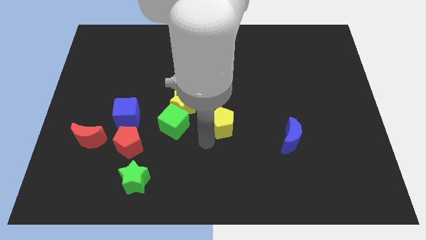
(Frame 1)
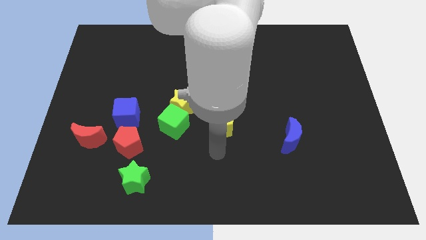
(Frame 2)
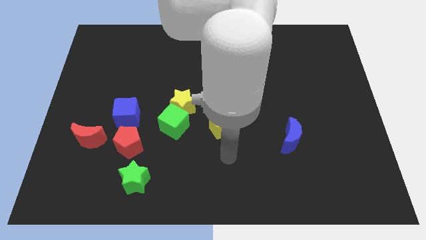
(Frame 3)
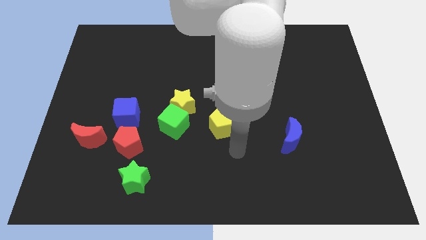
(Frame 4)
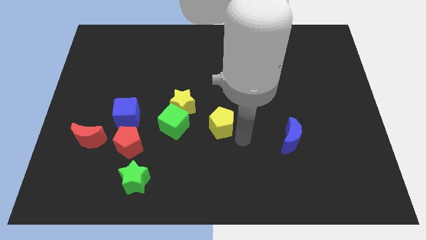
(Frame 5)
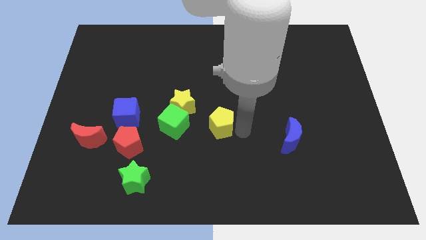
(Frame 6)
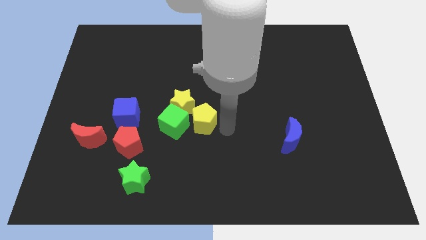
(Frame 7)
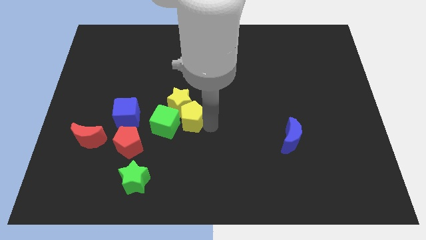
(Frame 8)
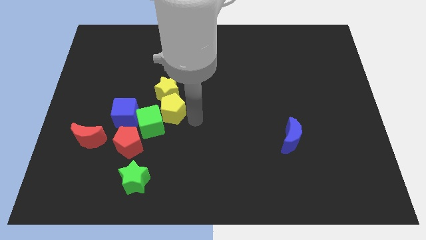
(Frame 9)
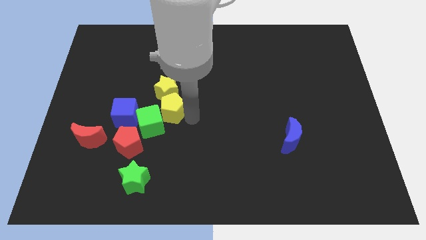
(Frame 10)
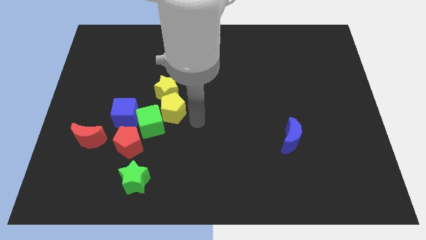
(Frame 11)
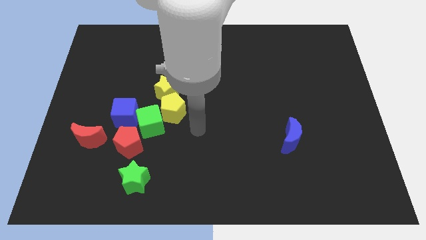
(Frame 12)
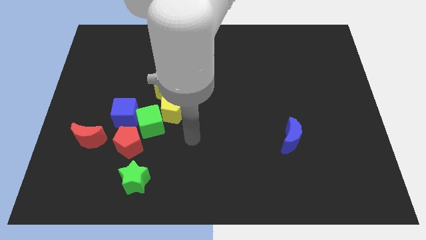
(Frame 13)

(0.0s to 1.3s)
push the yellow pentagon into the yellow star

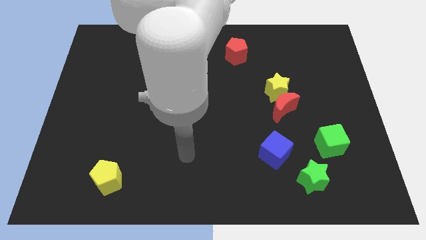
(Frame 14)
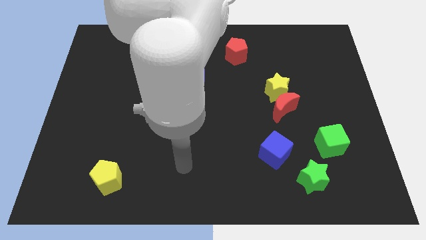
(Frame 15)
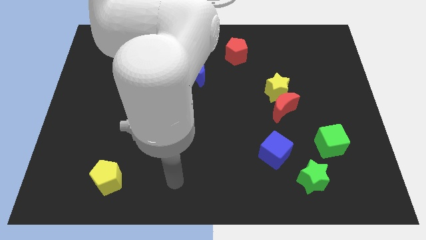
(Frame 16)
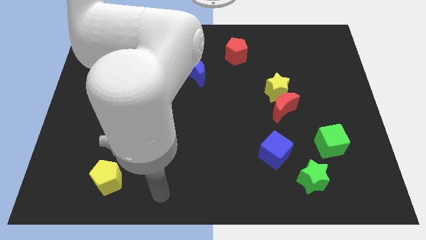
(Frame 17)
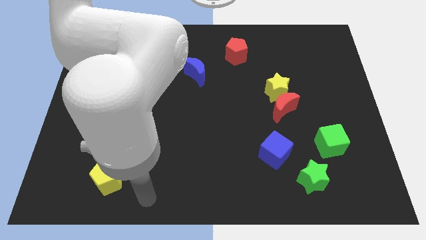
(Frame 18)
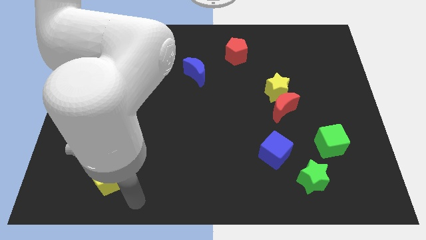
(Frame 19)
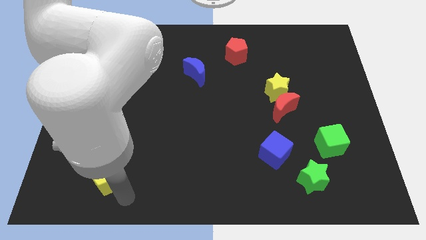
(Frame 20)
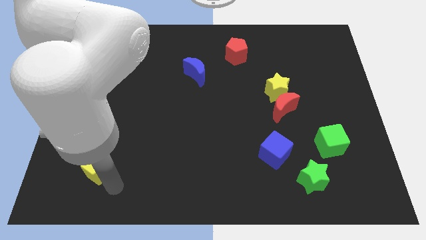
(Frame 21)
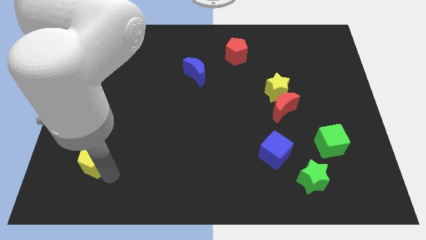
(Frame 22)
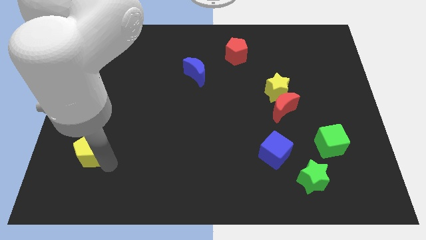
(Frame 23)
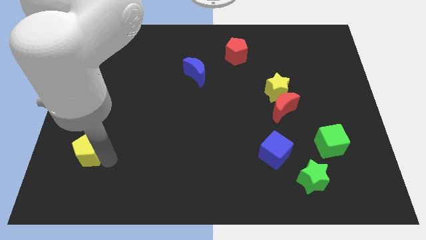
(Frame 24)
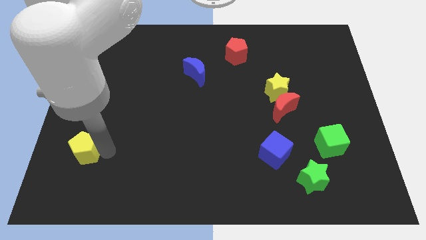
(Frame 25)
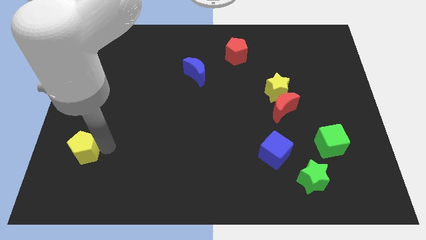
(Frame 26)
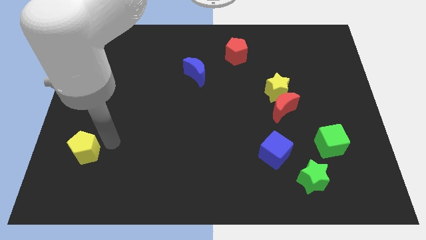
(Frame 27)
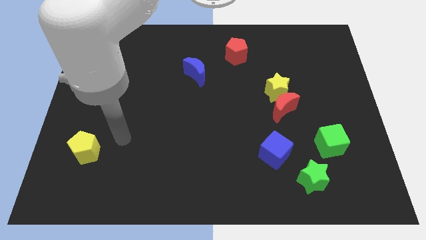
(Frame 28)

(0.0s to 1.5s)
push the yellow pentagon towards the left side of the board

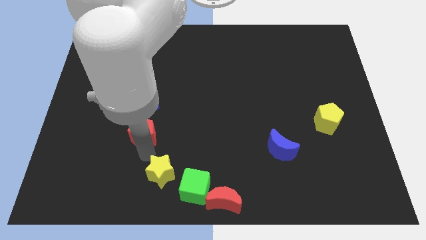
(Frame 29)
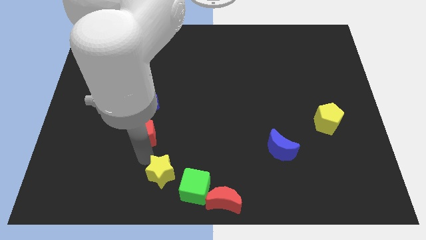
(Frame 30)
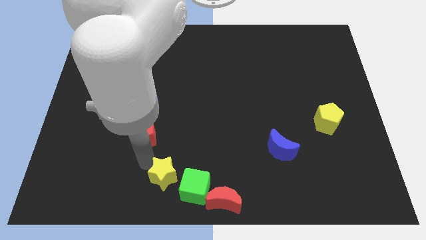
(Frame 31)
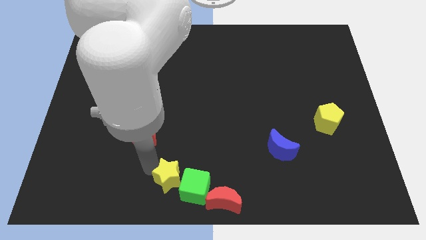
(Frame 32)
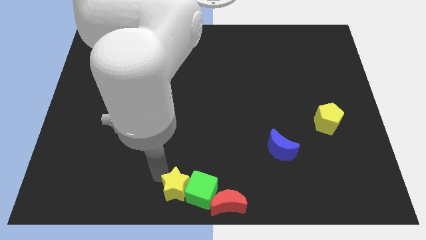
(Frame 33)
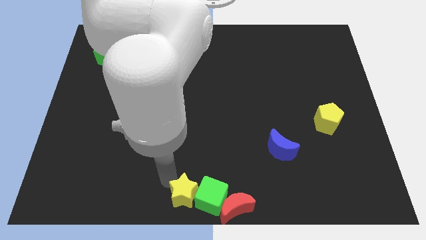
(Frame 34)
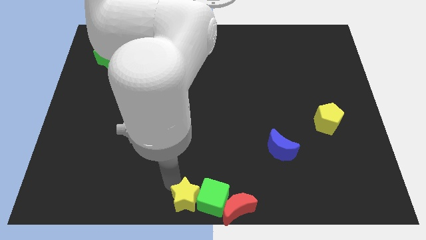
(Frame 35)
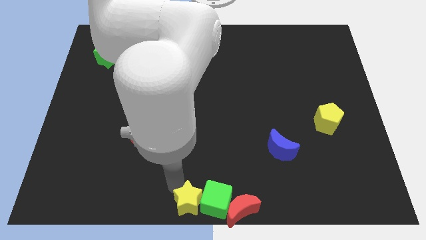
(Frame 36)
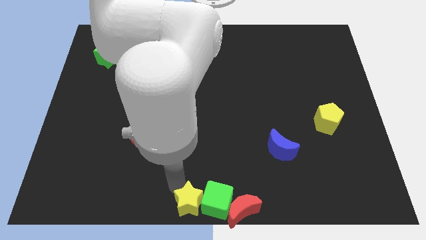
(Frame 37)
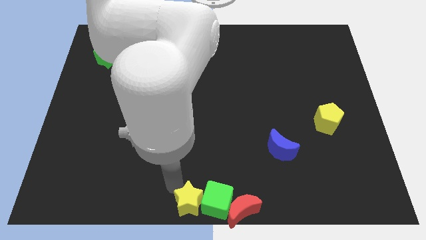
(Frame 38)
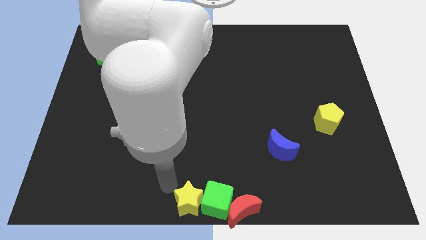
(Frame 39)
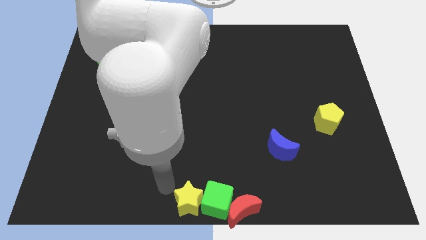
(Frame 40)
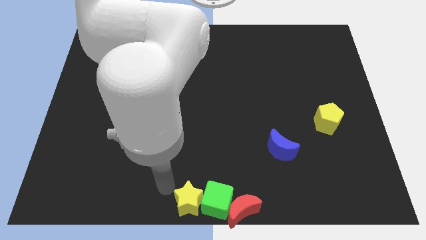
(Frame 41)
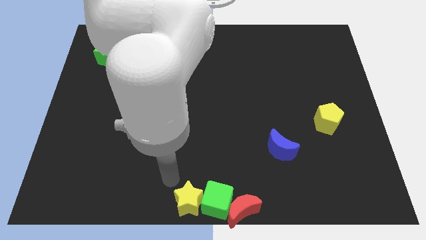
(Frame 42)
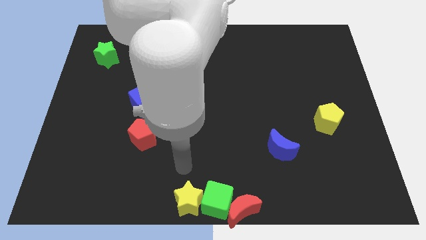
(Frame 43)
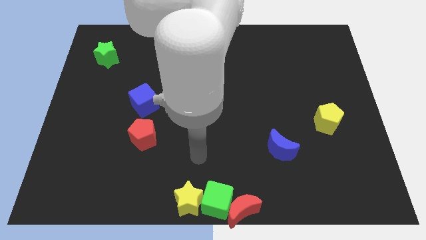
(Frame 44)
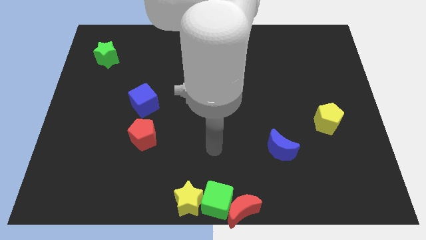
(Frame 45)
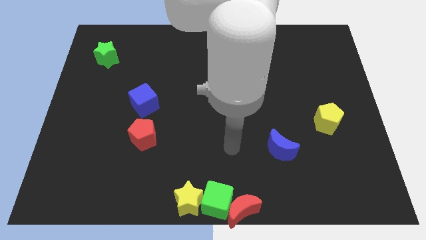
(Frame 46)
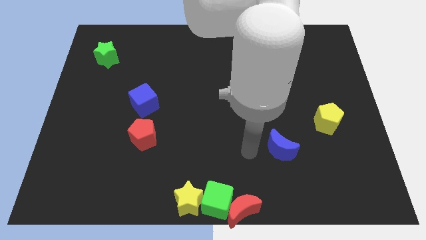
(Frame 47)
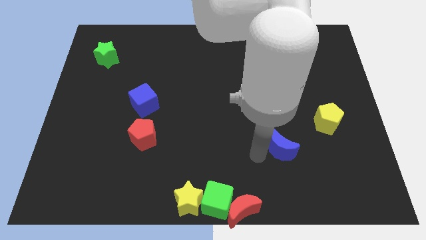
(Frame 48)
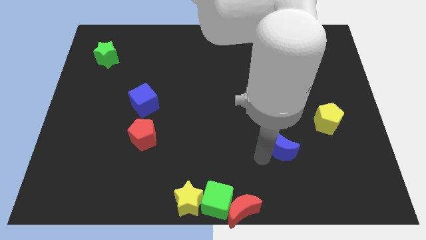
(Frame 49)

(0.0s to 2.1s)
move the yellow star and green cube and red moon to the bottom center

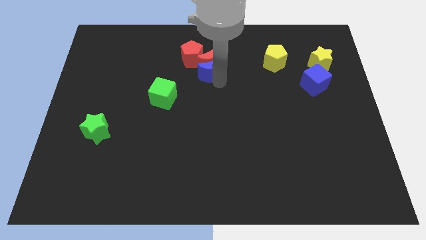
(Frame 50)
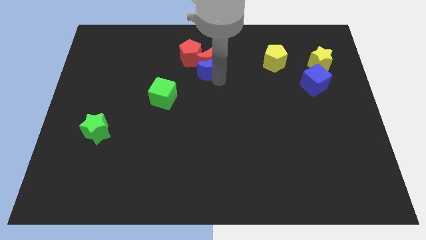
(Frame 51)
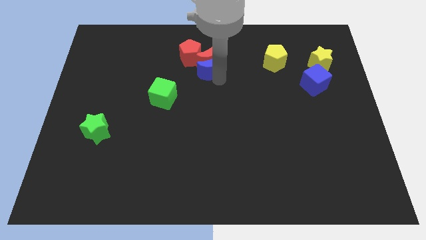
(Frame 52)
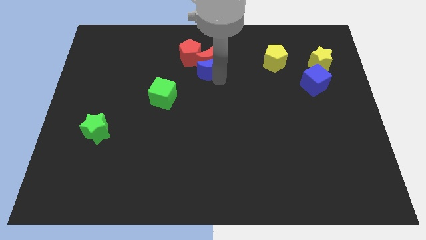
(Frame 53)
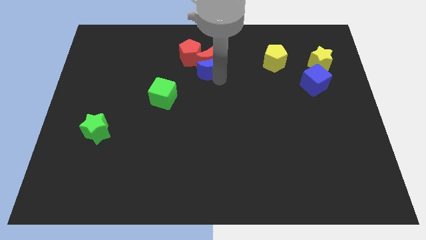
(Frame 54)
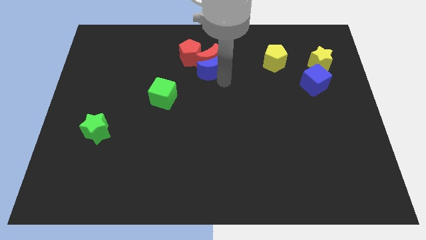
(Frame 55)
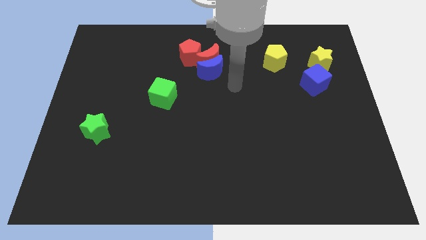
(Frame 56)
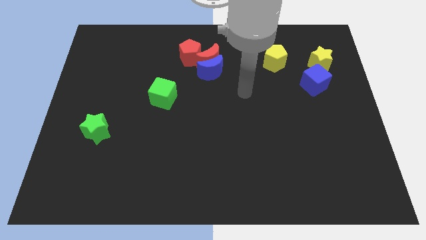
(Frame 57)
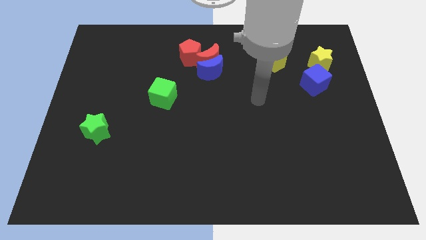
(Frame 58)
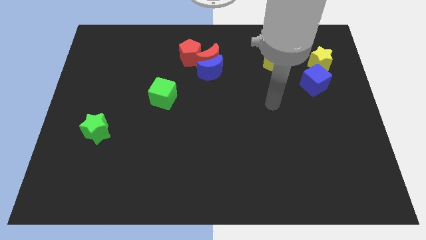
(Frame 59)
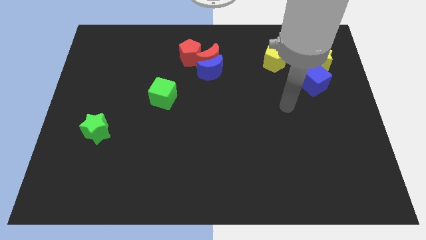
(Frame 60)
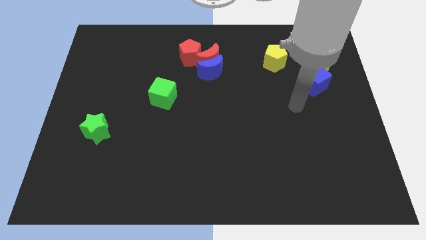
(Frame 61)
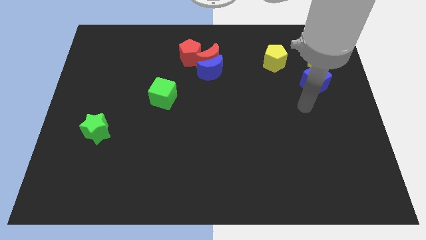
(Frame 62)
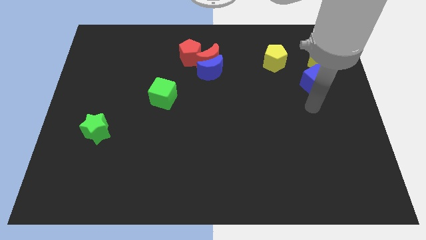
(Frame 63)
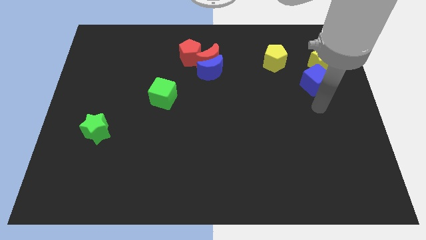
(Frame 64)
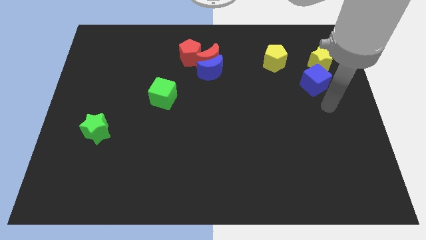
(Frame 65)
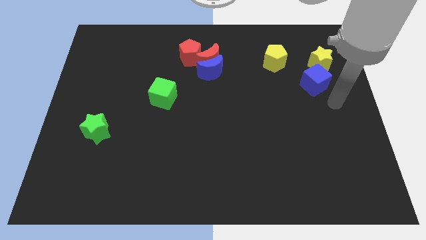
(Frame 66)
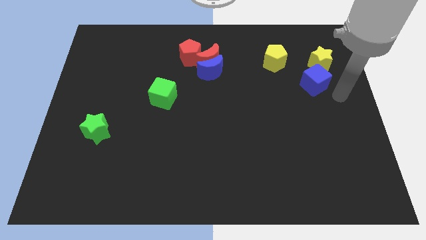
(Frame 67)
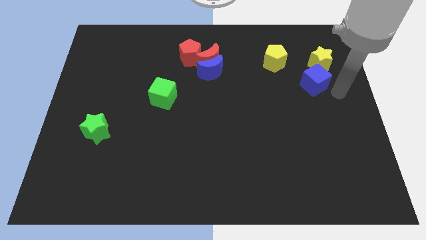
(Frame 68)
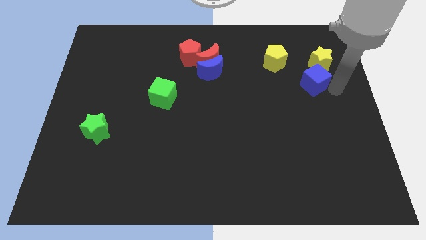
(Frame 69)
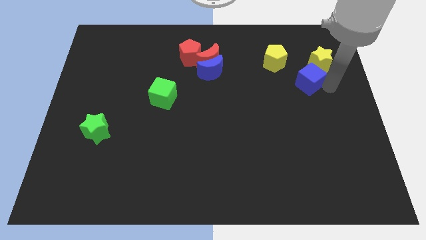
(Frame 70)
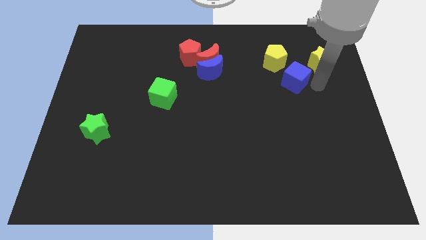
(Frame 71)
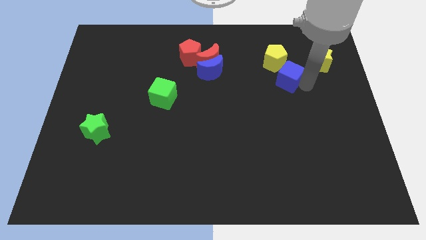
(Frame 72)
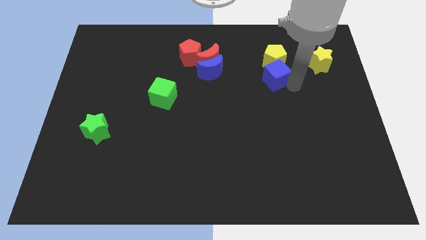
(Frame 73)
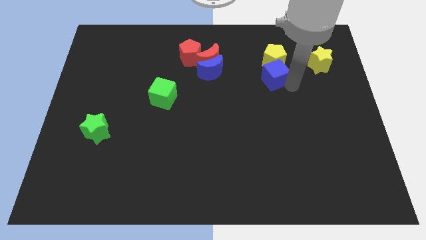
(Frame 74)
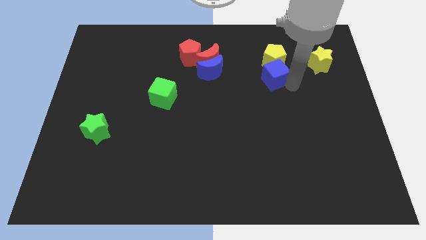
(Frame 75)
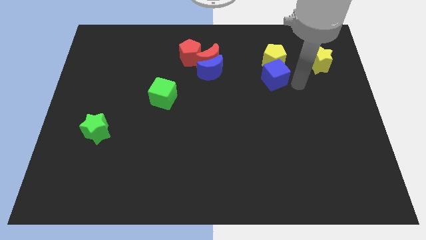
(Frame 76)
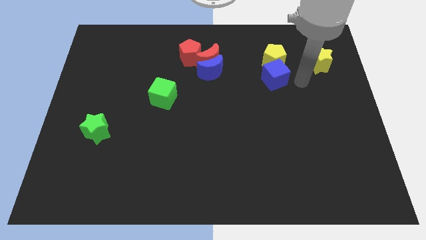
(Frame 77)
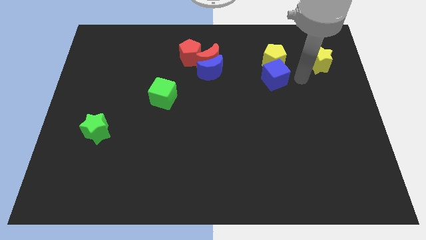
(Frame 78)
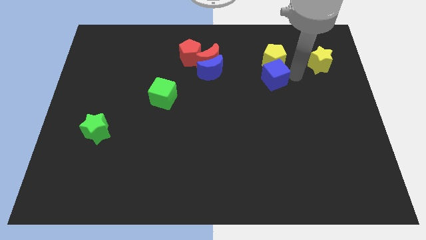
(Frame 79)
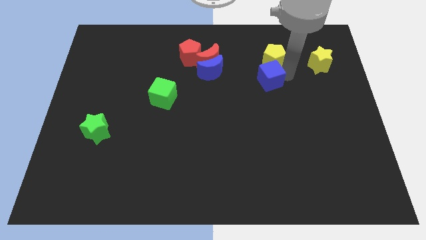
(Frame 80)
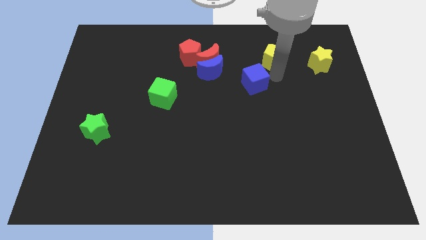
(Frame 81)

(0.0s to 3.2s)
push the blue cube at the bottom of the yellow pentagon

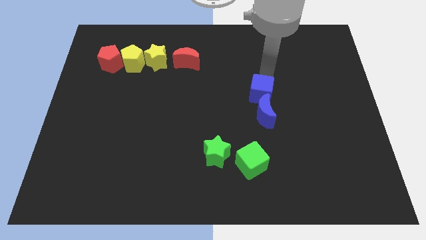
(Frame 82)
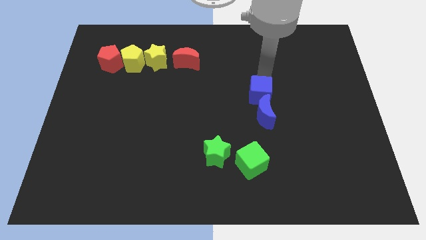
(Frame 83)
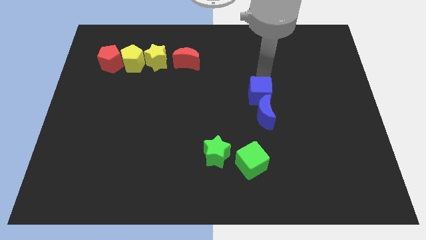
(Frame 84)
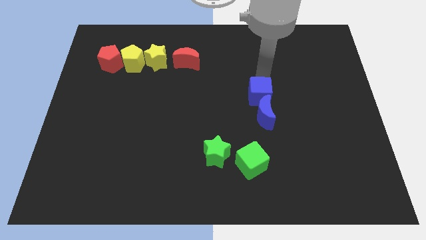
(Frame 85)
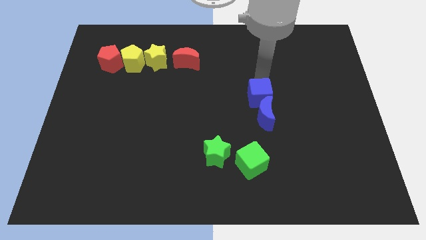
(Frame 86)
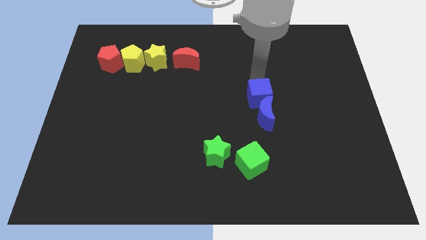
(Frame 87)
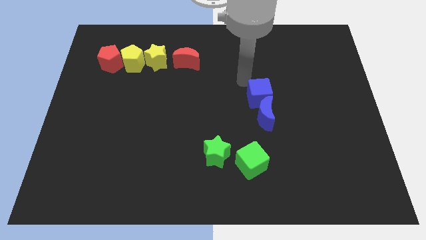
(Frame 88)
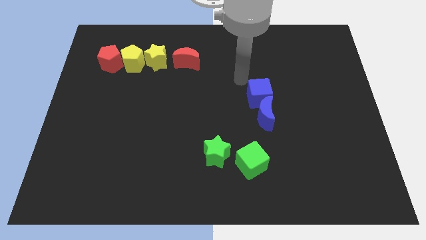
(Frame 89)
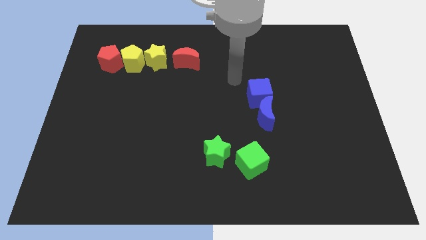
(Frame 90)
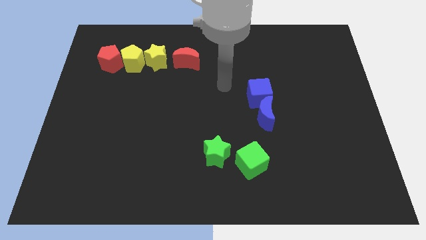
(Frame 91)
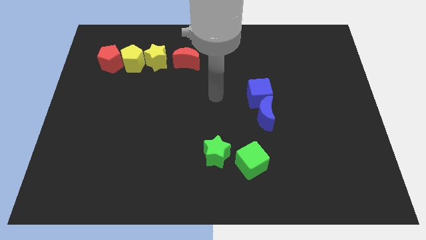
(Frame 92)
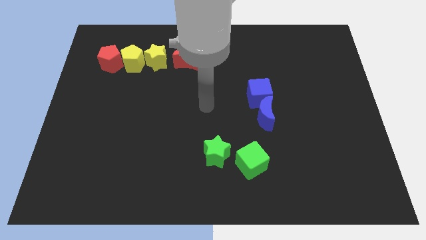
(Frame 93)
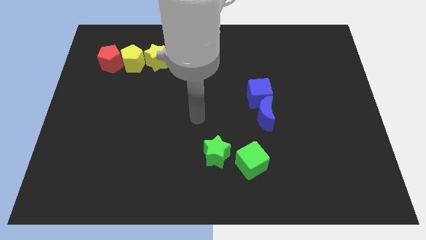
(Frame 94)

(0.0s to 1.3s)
slightly push the blue cube along the blue crescent towards the bottom of the board
